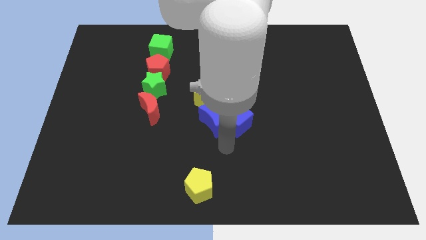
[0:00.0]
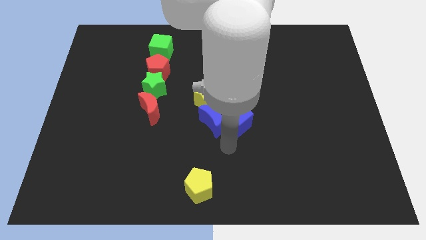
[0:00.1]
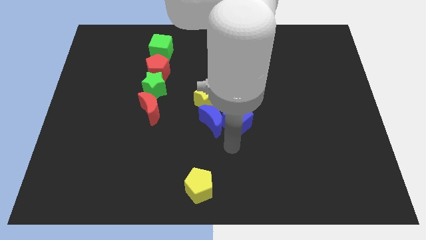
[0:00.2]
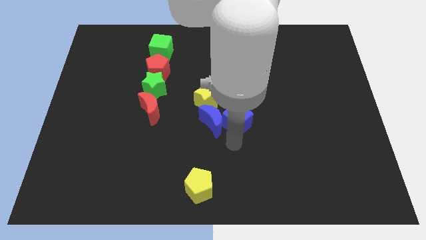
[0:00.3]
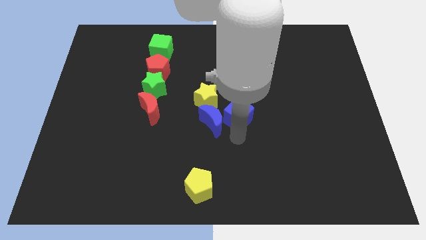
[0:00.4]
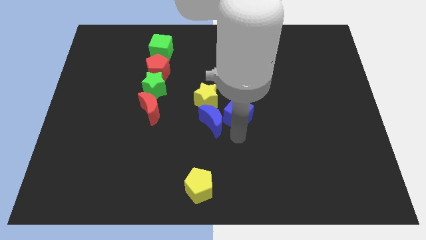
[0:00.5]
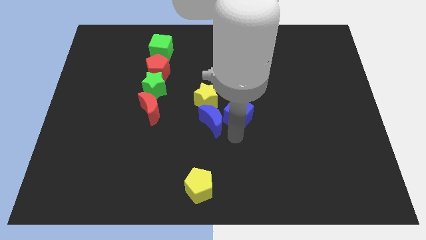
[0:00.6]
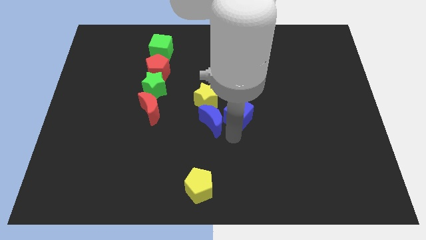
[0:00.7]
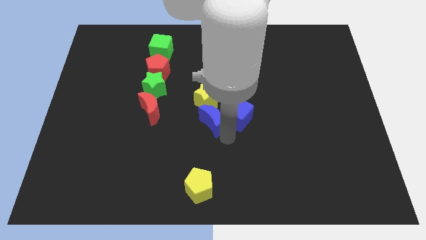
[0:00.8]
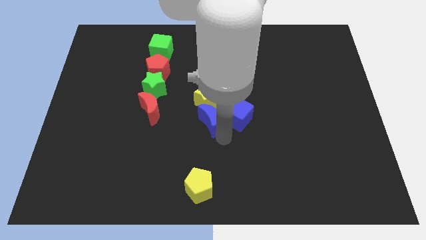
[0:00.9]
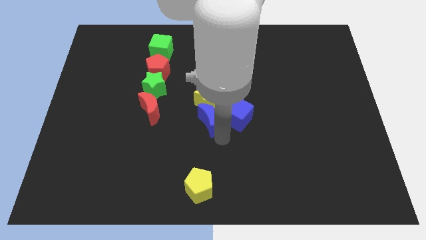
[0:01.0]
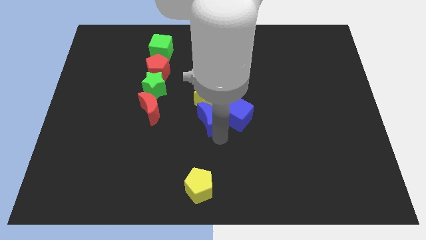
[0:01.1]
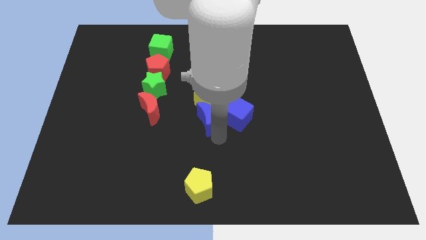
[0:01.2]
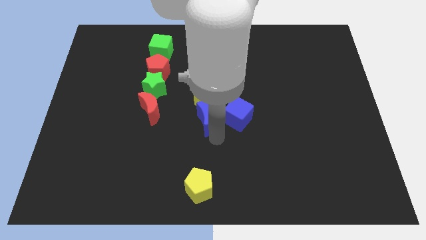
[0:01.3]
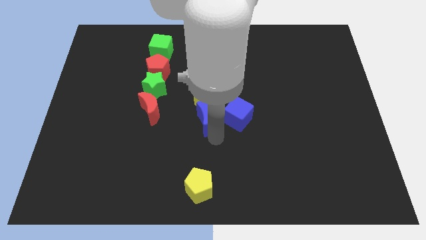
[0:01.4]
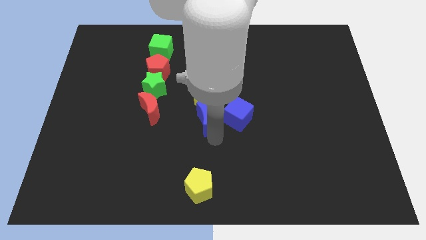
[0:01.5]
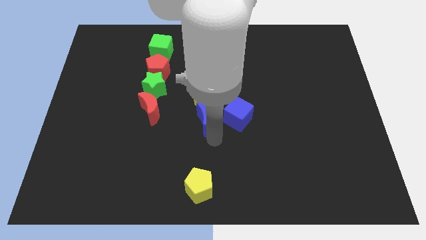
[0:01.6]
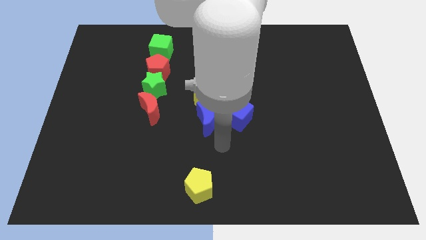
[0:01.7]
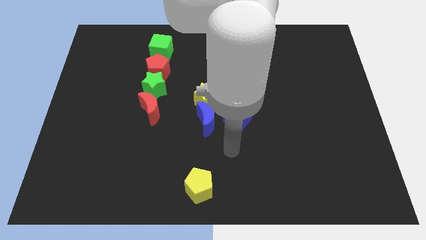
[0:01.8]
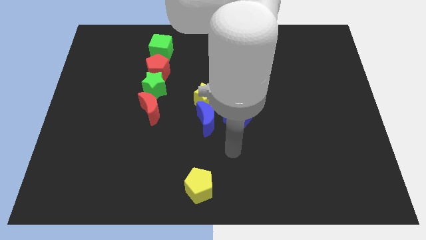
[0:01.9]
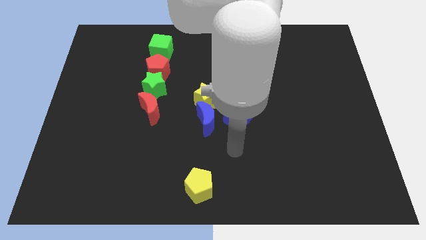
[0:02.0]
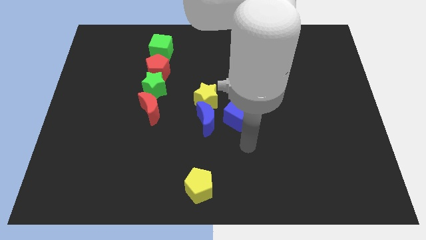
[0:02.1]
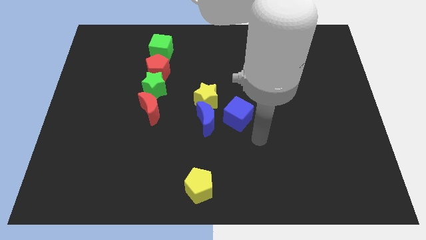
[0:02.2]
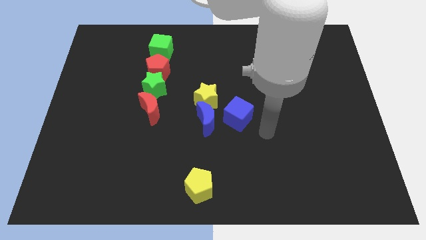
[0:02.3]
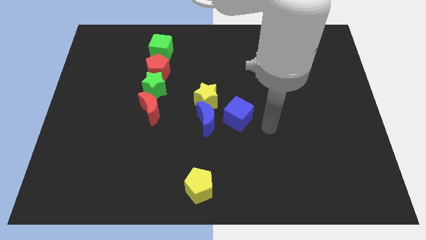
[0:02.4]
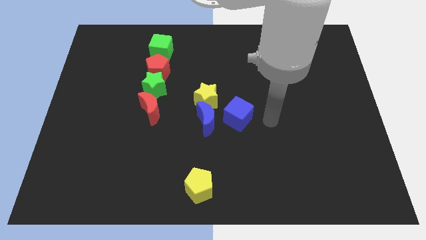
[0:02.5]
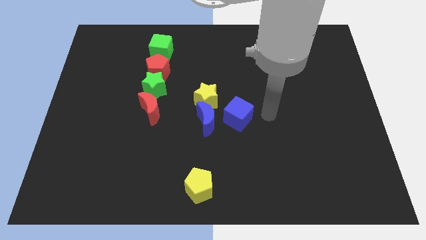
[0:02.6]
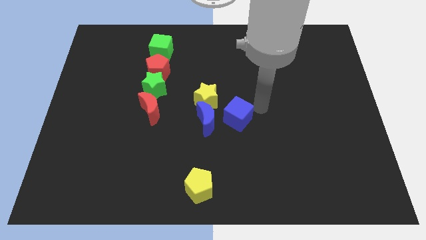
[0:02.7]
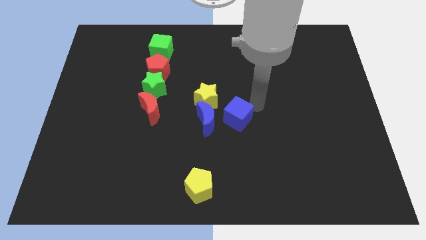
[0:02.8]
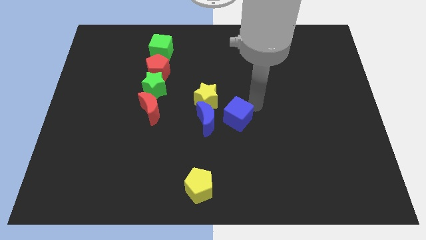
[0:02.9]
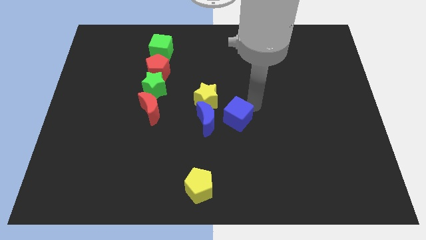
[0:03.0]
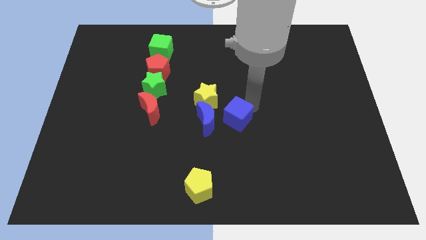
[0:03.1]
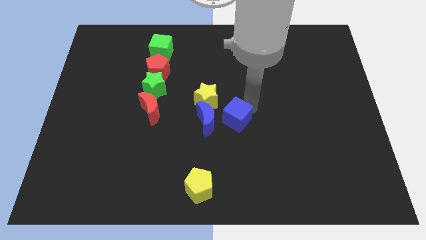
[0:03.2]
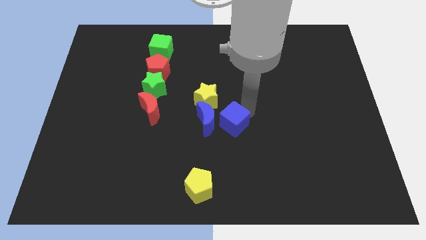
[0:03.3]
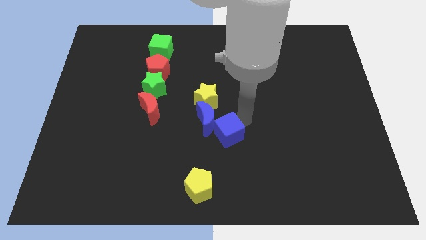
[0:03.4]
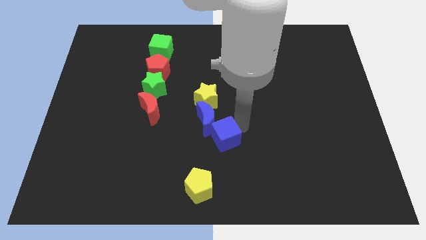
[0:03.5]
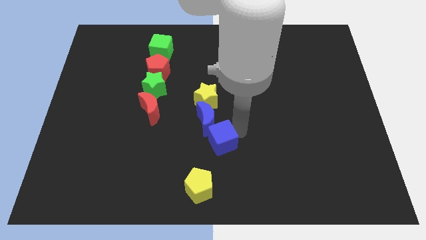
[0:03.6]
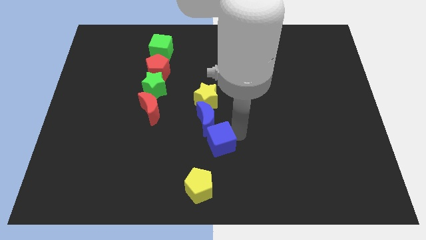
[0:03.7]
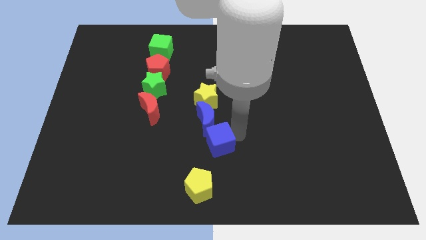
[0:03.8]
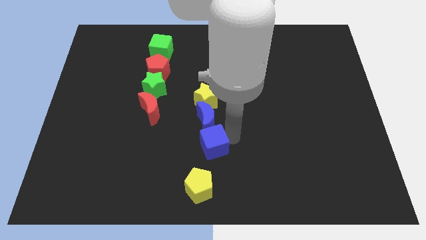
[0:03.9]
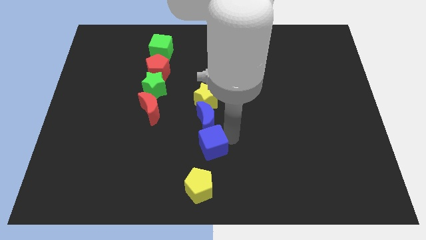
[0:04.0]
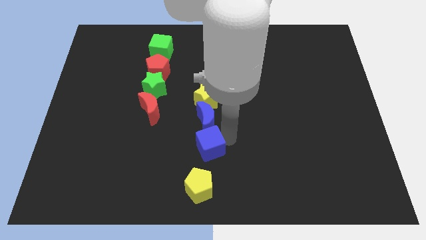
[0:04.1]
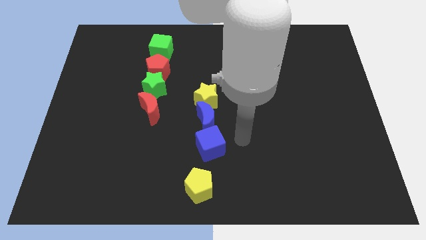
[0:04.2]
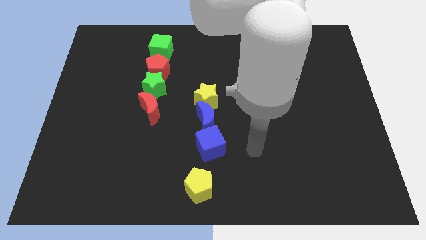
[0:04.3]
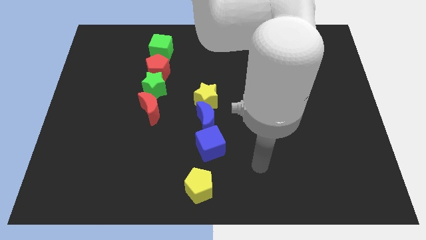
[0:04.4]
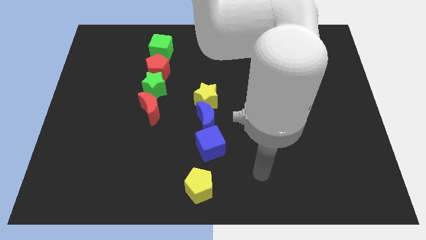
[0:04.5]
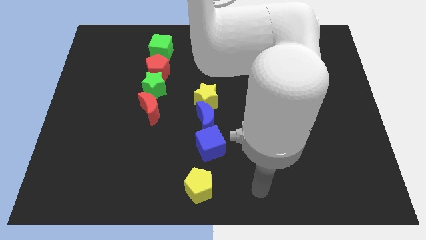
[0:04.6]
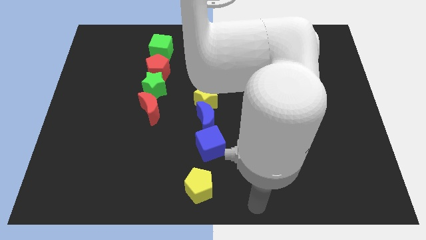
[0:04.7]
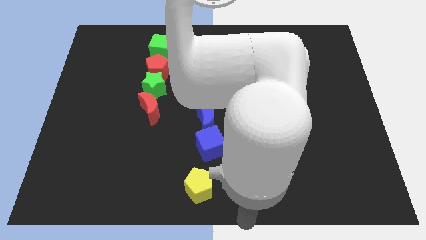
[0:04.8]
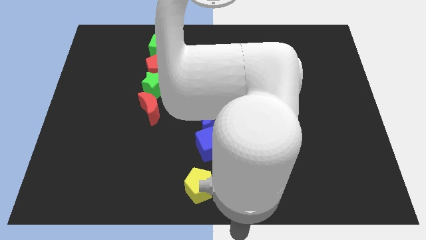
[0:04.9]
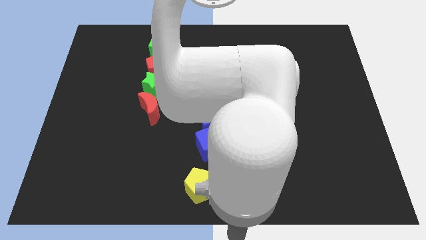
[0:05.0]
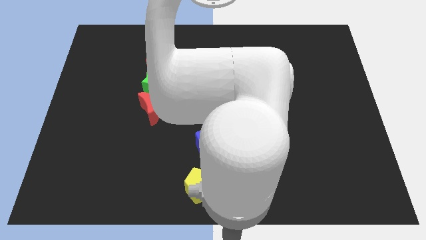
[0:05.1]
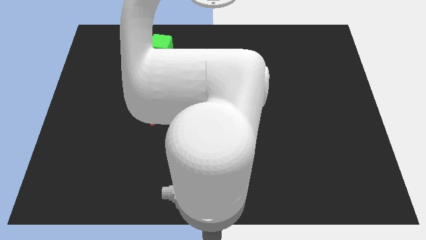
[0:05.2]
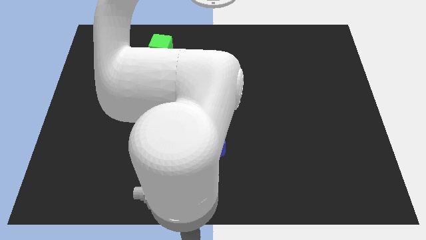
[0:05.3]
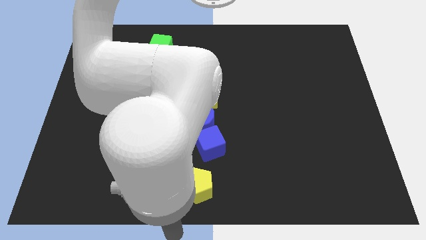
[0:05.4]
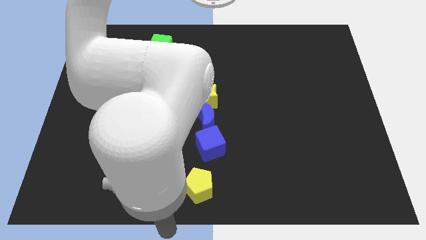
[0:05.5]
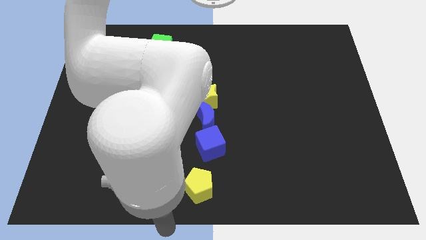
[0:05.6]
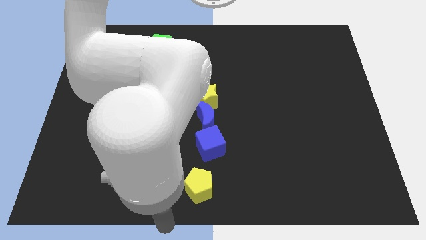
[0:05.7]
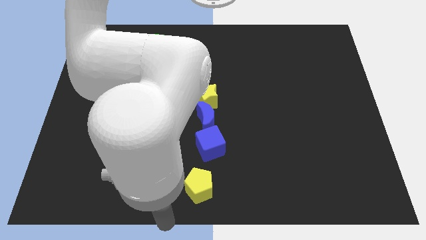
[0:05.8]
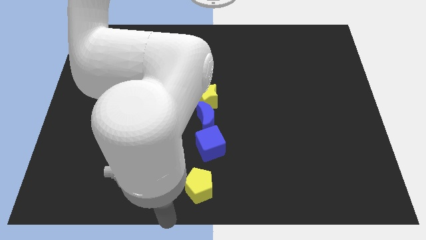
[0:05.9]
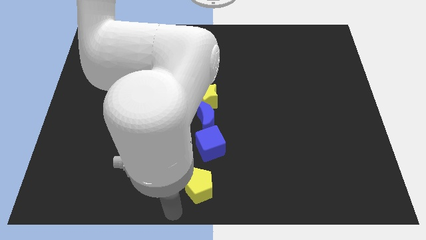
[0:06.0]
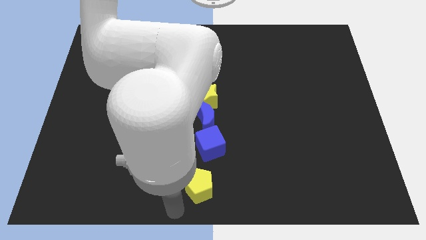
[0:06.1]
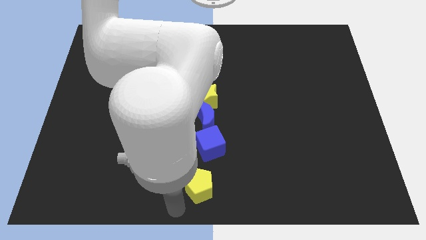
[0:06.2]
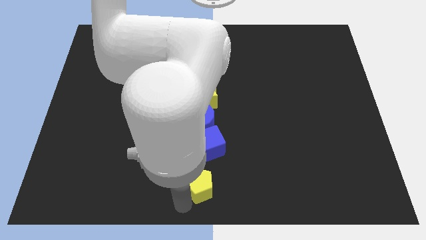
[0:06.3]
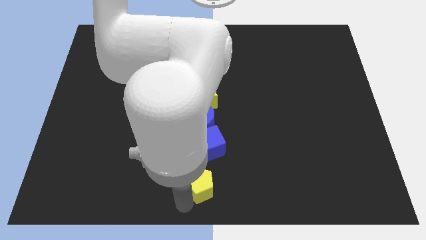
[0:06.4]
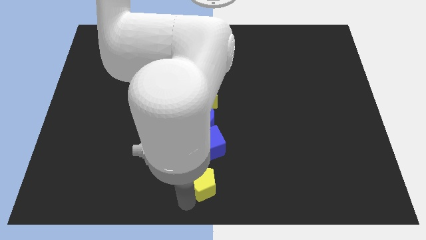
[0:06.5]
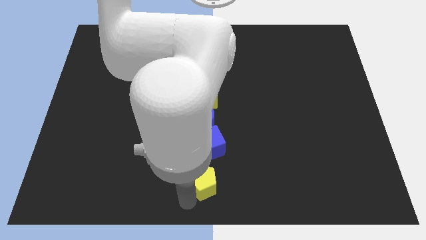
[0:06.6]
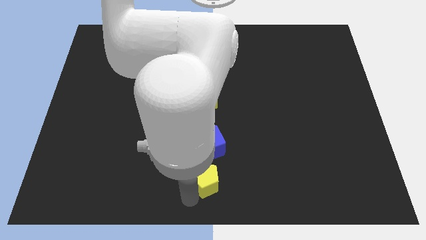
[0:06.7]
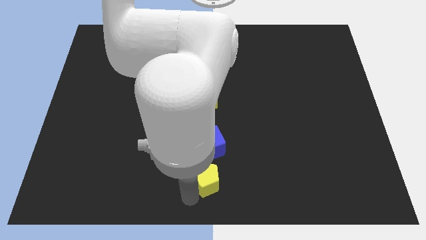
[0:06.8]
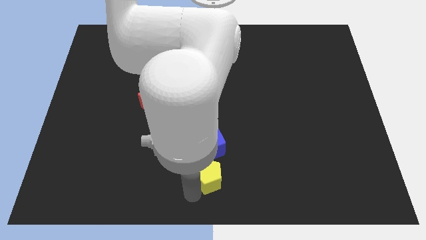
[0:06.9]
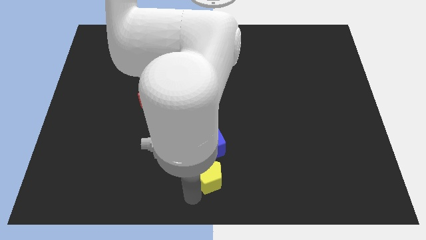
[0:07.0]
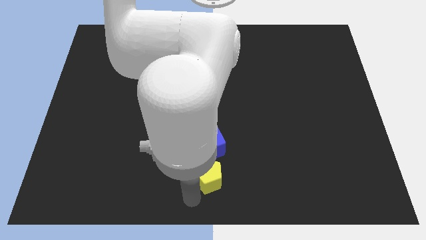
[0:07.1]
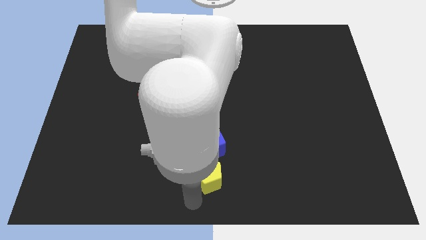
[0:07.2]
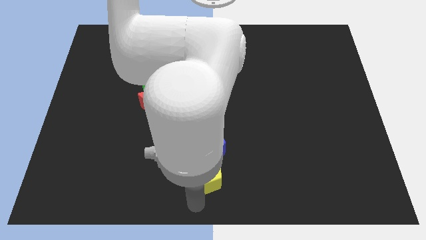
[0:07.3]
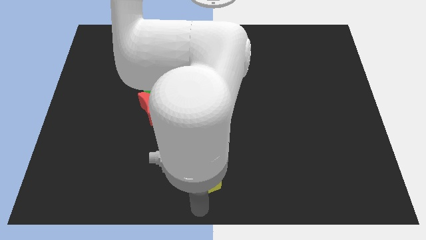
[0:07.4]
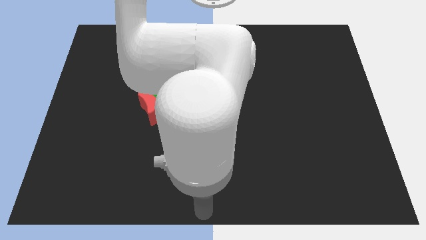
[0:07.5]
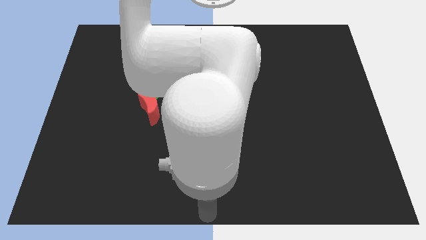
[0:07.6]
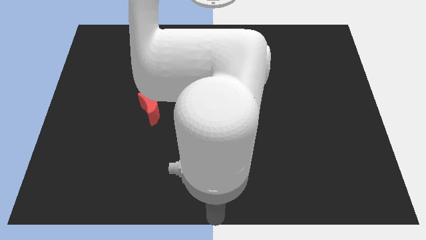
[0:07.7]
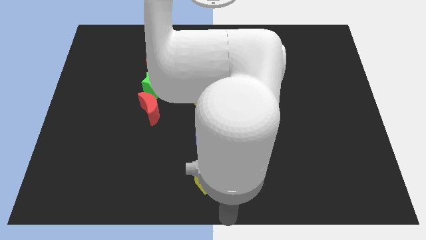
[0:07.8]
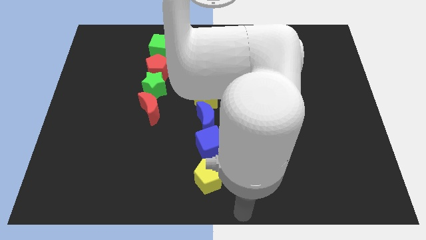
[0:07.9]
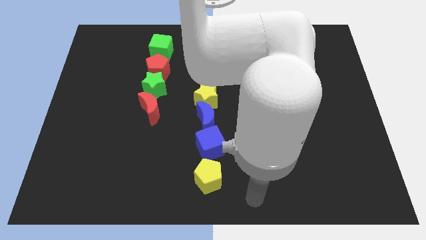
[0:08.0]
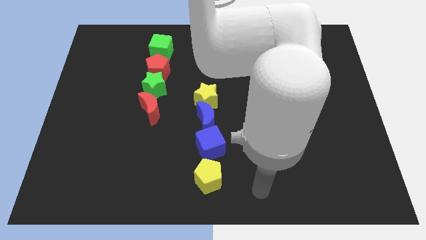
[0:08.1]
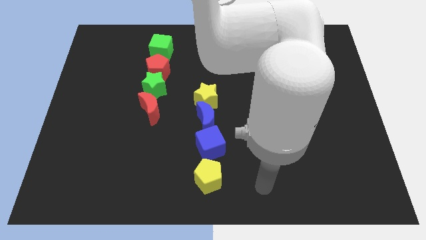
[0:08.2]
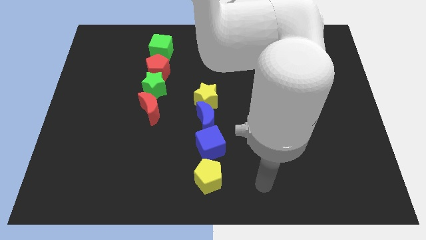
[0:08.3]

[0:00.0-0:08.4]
rearrange the blocks in the separate column

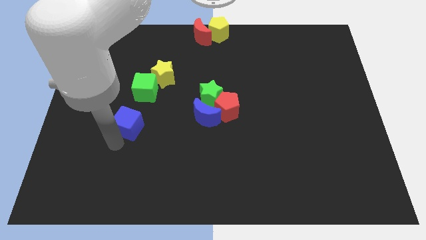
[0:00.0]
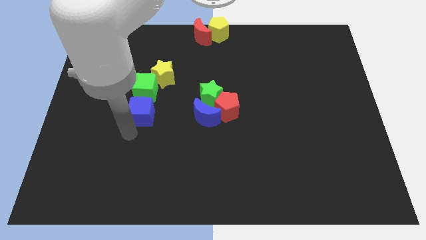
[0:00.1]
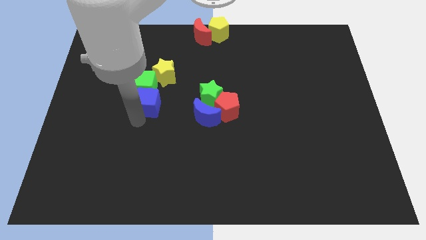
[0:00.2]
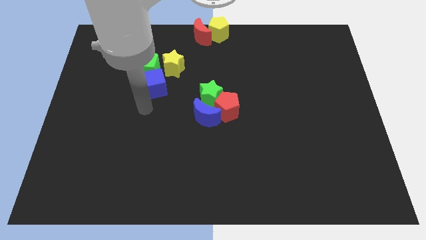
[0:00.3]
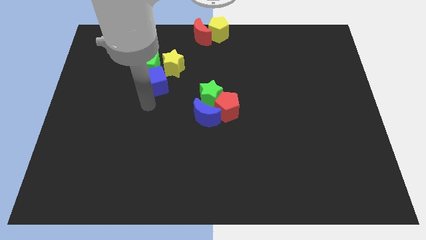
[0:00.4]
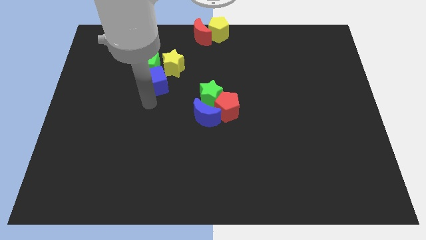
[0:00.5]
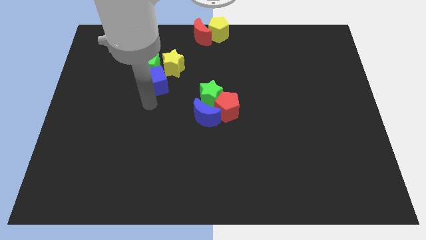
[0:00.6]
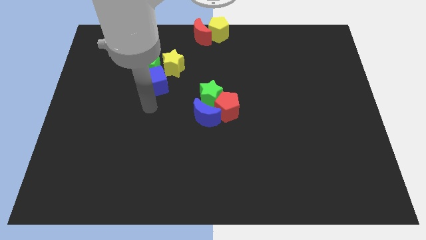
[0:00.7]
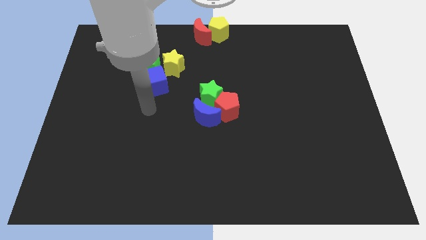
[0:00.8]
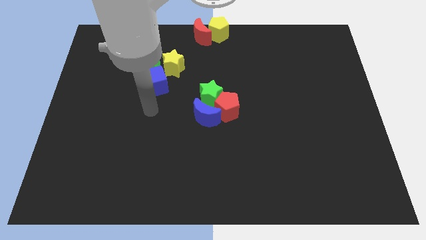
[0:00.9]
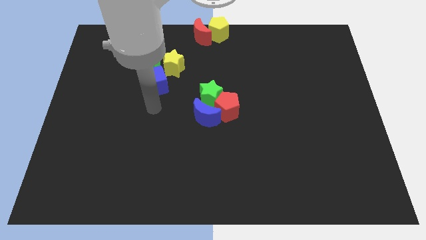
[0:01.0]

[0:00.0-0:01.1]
move the blue cube slightly upwards
